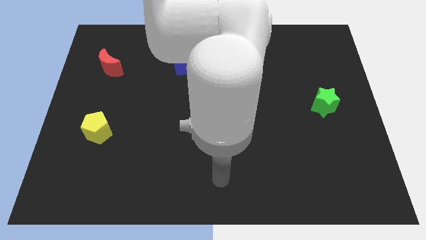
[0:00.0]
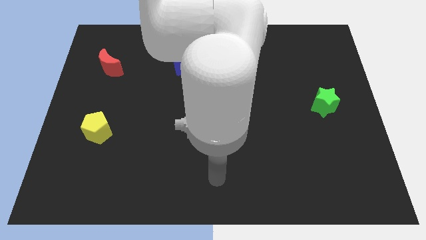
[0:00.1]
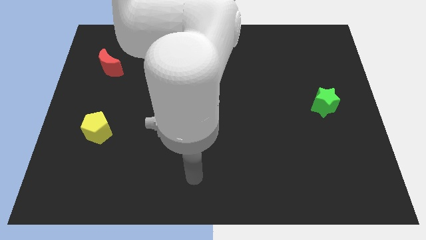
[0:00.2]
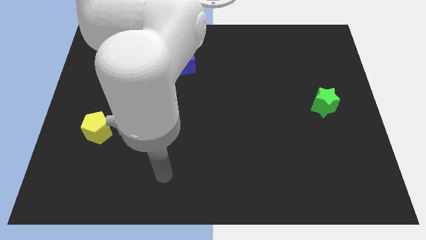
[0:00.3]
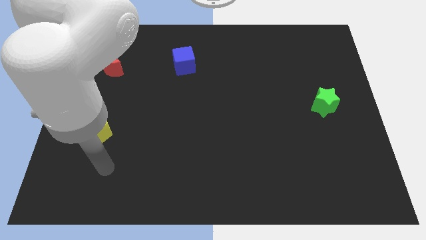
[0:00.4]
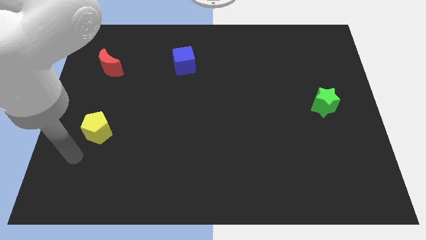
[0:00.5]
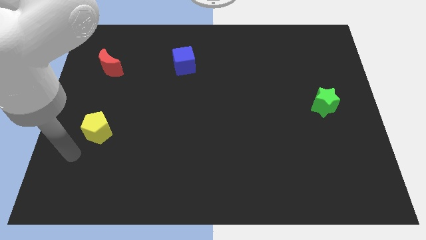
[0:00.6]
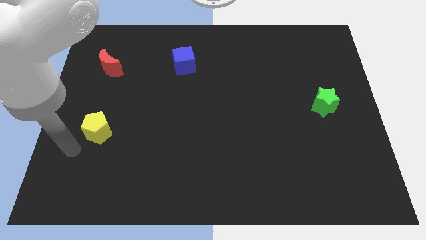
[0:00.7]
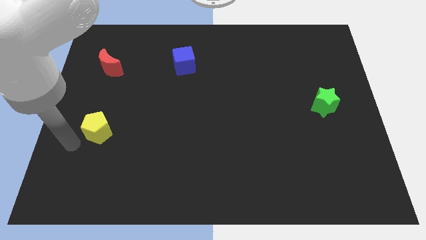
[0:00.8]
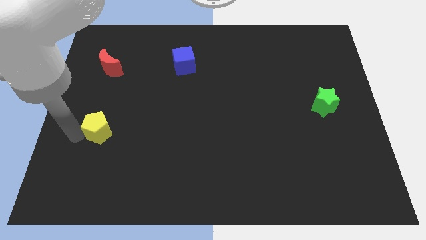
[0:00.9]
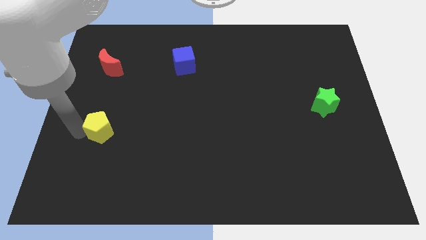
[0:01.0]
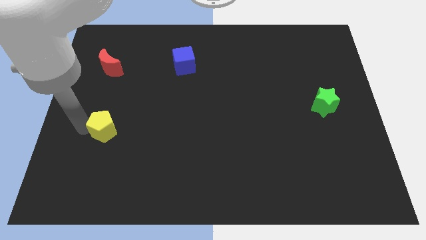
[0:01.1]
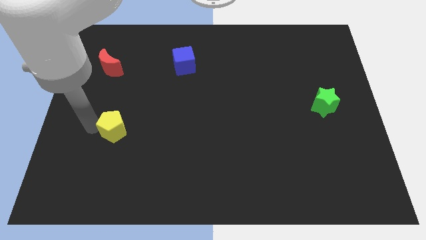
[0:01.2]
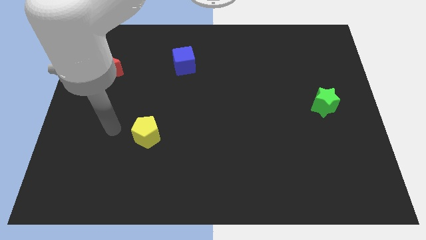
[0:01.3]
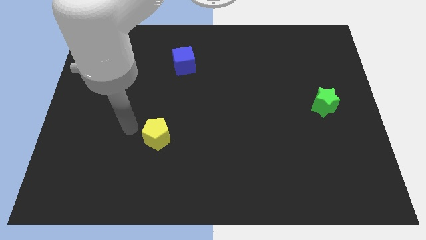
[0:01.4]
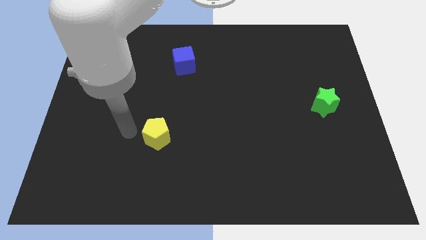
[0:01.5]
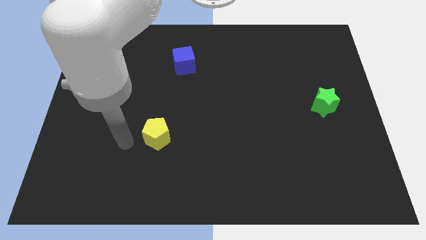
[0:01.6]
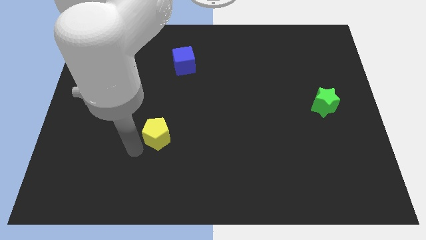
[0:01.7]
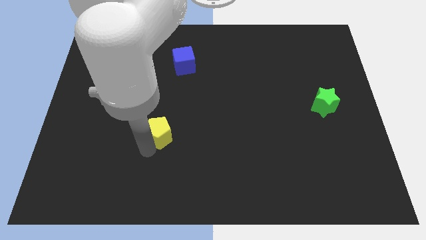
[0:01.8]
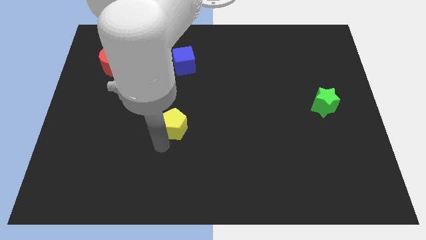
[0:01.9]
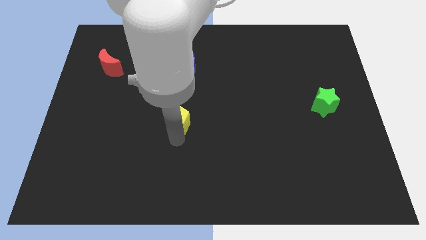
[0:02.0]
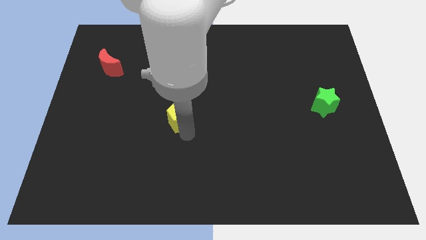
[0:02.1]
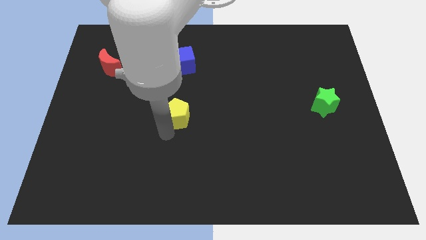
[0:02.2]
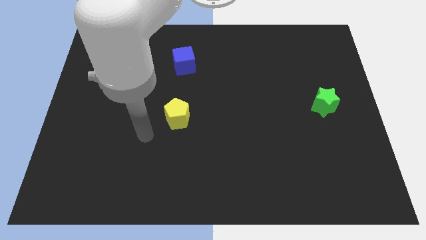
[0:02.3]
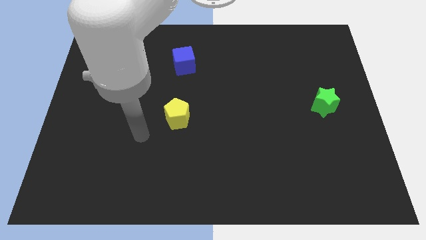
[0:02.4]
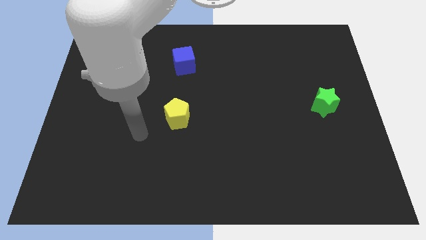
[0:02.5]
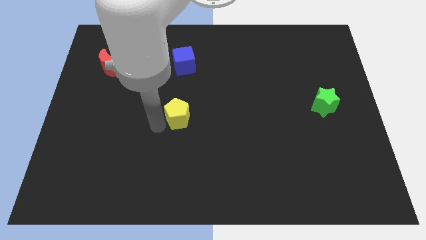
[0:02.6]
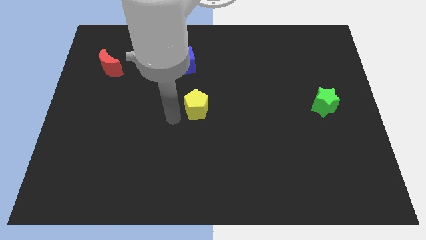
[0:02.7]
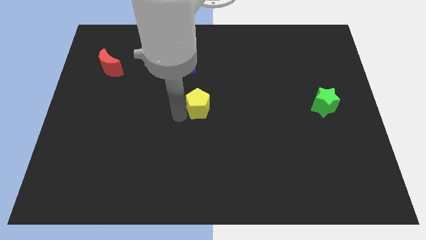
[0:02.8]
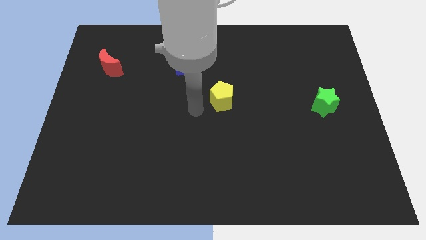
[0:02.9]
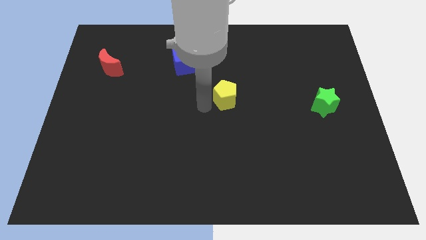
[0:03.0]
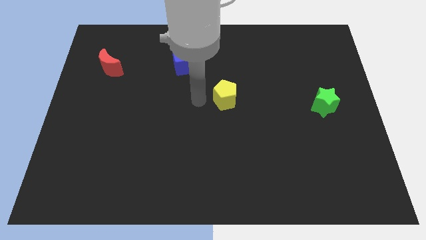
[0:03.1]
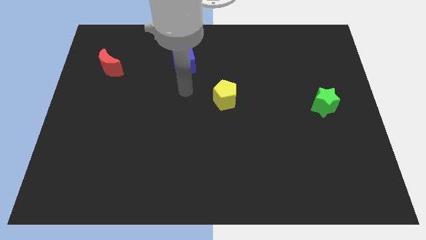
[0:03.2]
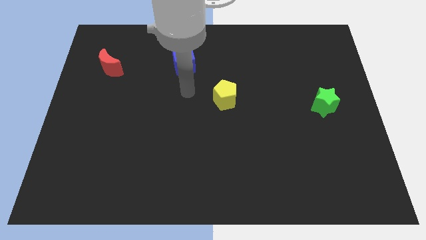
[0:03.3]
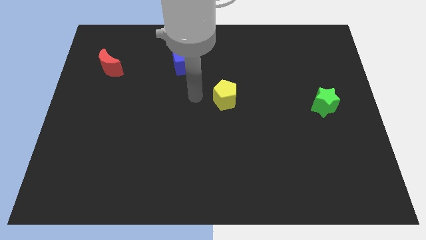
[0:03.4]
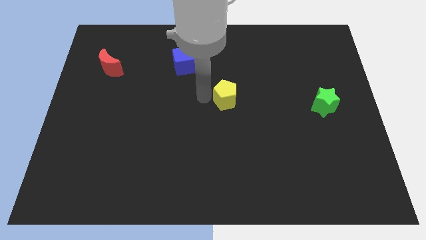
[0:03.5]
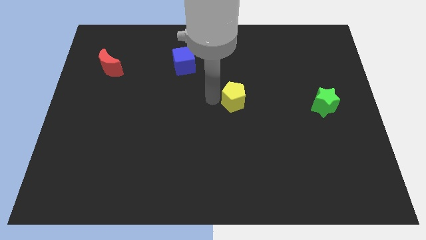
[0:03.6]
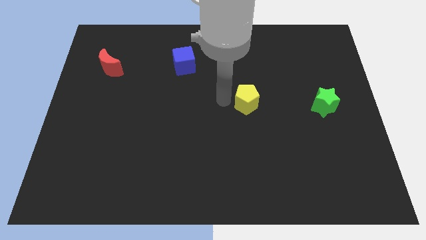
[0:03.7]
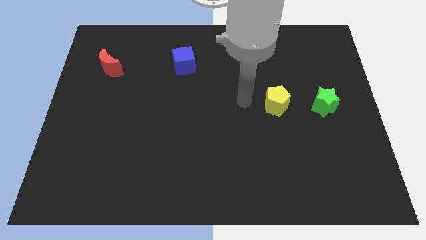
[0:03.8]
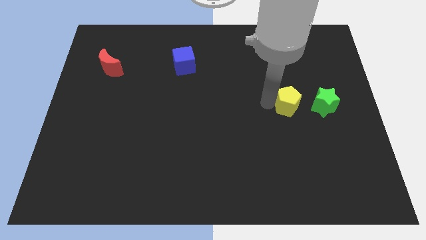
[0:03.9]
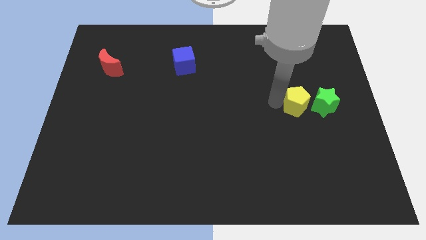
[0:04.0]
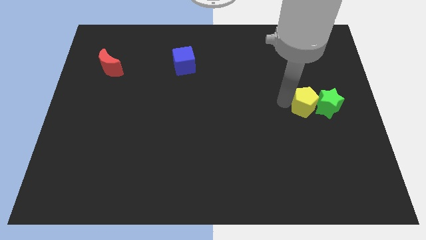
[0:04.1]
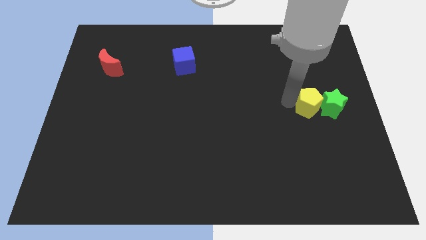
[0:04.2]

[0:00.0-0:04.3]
slide the pentagon to the green block

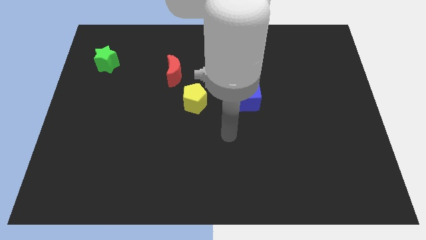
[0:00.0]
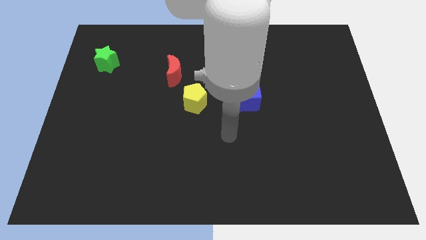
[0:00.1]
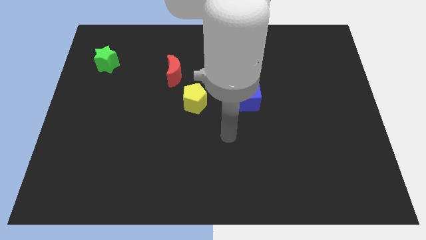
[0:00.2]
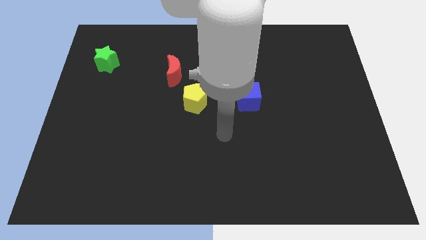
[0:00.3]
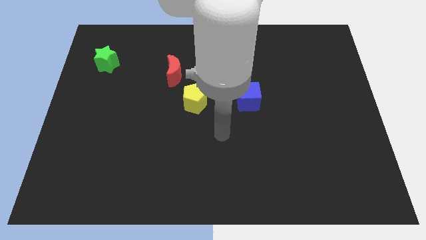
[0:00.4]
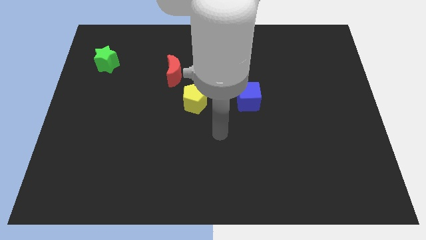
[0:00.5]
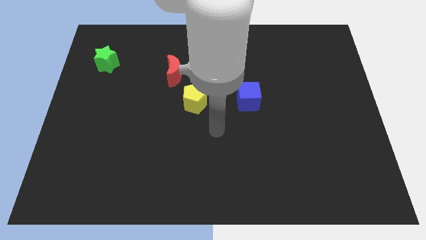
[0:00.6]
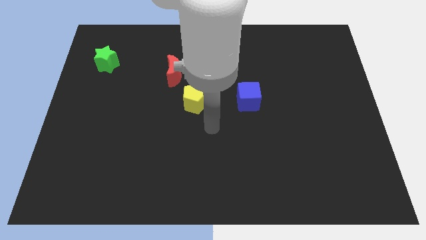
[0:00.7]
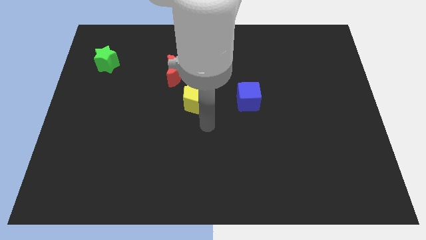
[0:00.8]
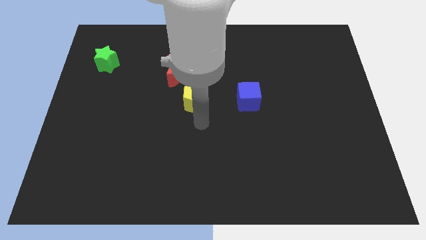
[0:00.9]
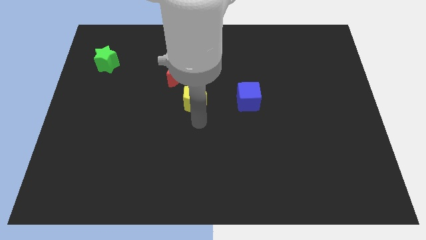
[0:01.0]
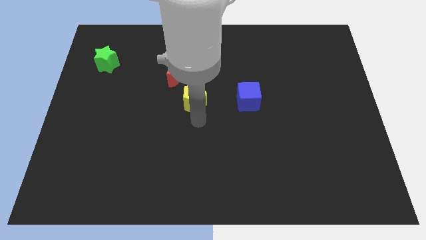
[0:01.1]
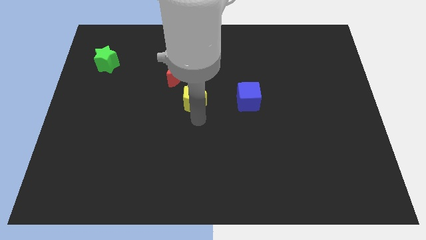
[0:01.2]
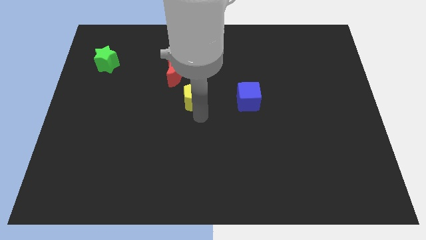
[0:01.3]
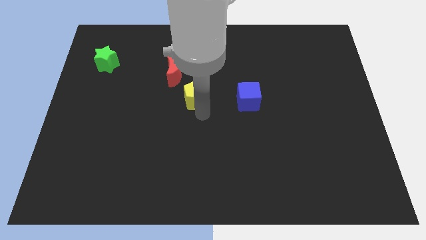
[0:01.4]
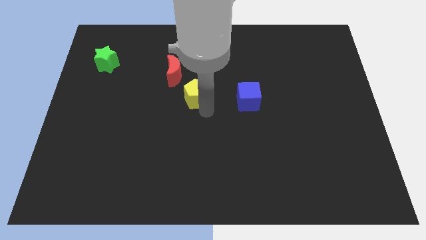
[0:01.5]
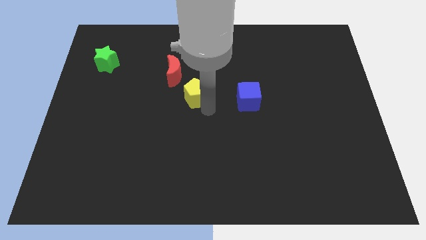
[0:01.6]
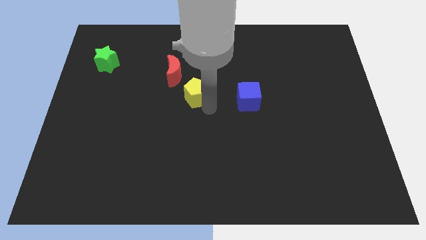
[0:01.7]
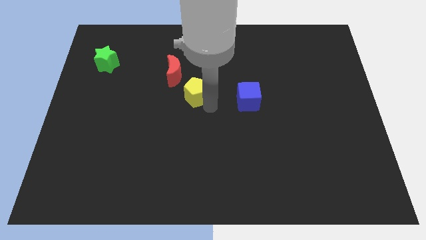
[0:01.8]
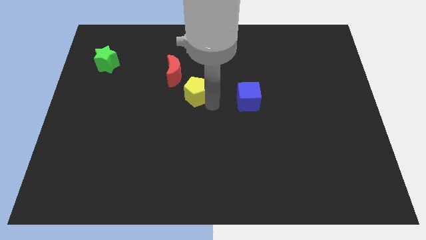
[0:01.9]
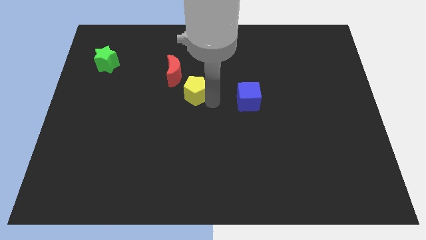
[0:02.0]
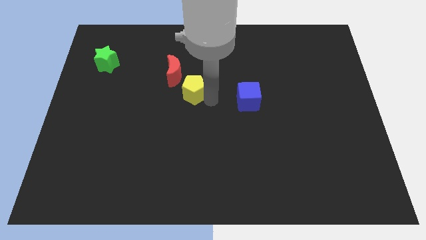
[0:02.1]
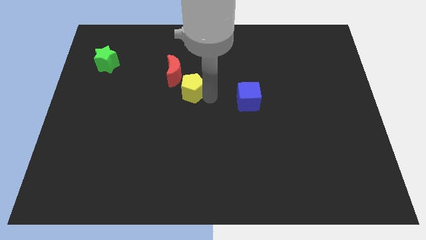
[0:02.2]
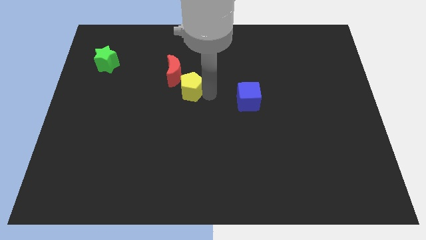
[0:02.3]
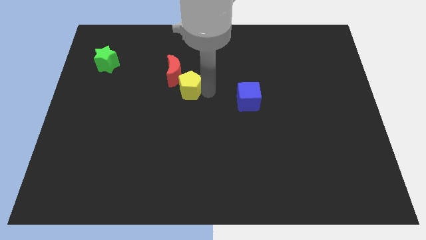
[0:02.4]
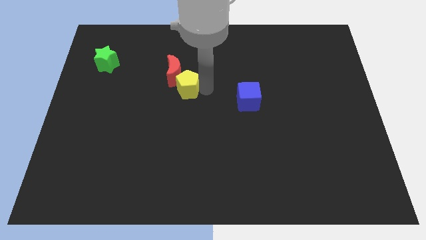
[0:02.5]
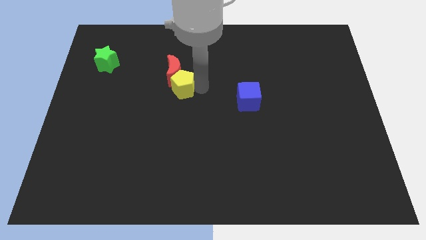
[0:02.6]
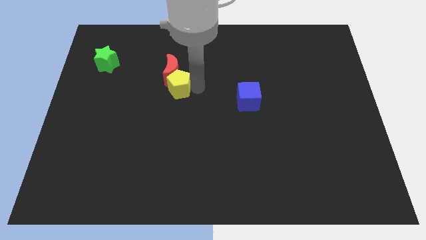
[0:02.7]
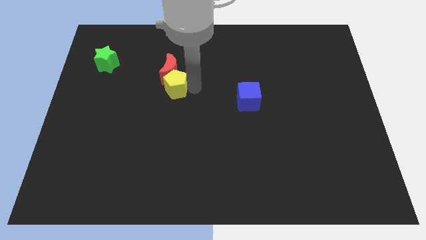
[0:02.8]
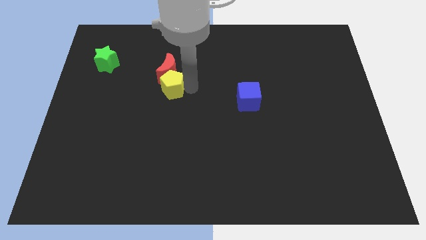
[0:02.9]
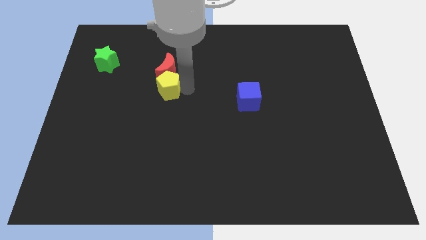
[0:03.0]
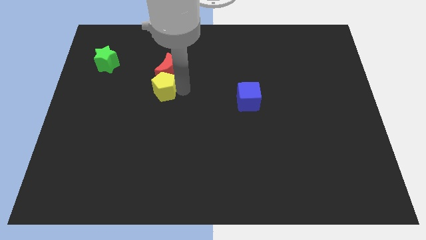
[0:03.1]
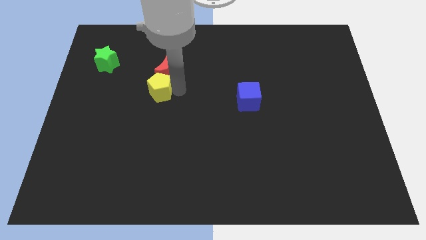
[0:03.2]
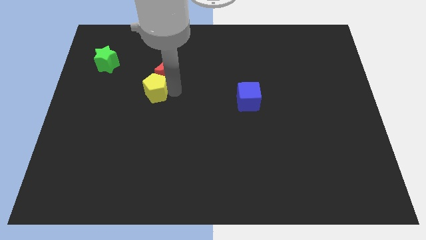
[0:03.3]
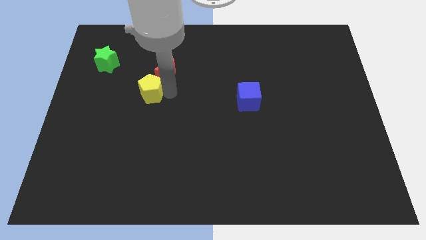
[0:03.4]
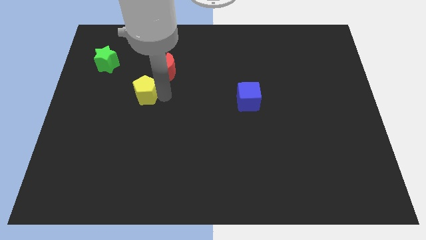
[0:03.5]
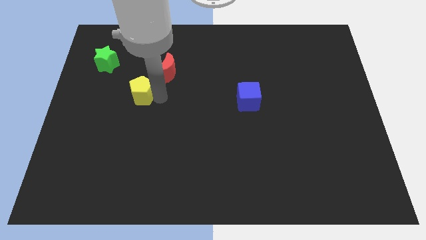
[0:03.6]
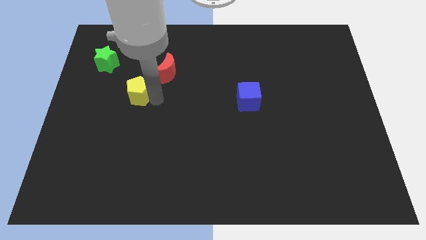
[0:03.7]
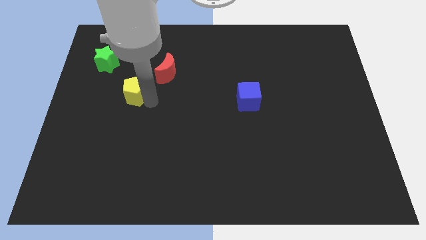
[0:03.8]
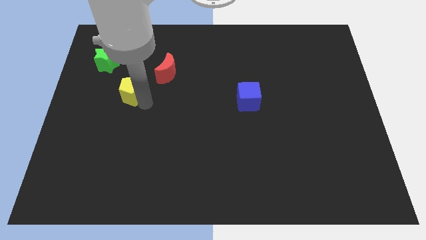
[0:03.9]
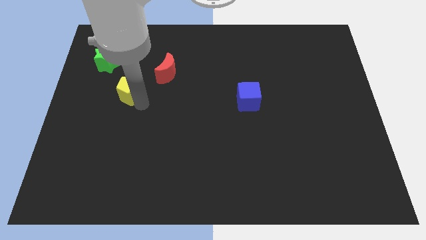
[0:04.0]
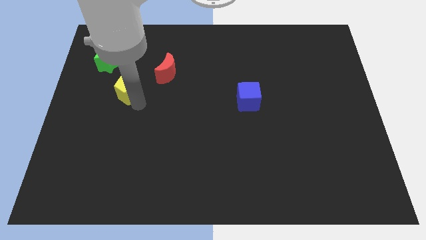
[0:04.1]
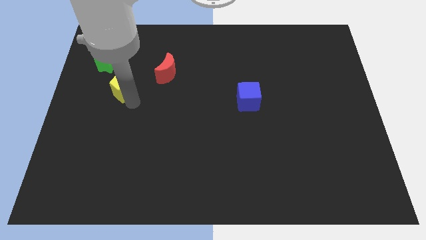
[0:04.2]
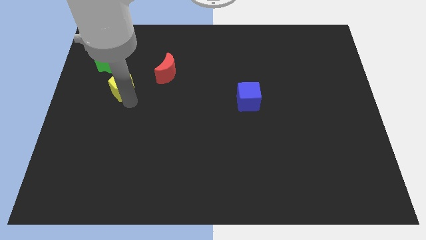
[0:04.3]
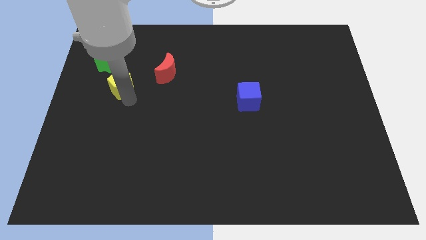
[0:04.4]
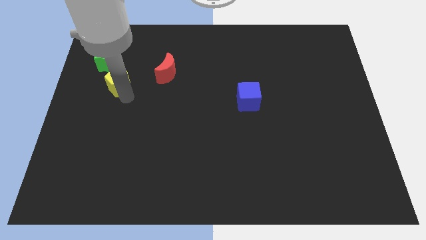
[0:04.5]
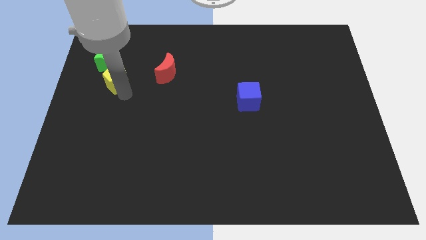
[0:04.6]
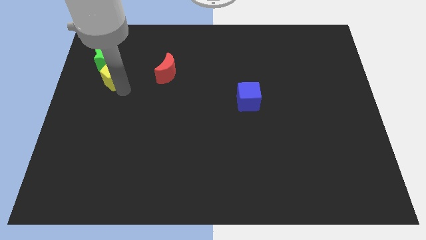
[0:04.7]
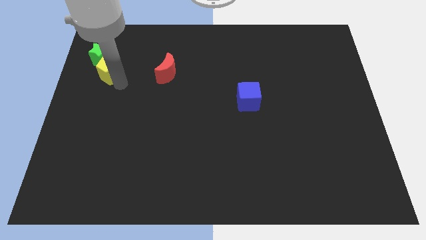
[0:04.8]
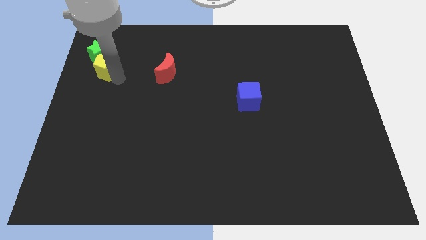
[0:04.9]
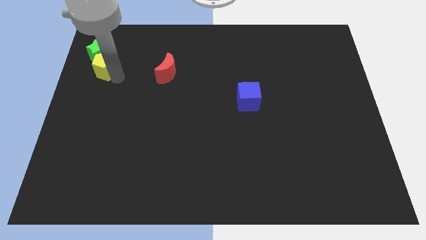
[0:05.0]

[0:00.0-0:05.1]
put the yellow block towards the green block
